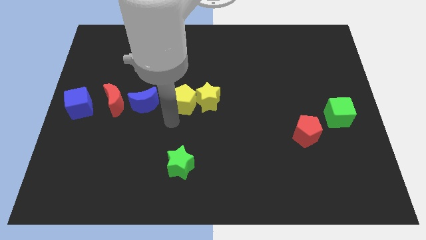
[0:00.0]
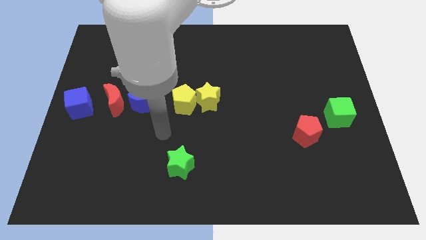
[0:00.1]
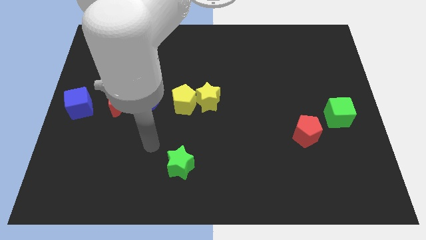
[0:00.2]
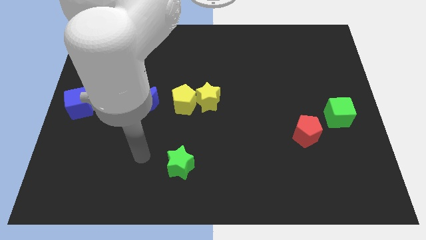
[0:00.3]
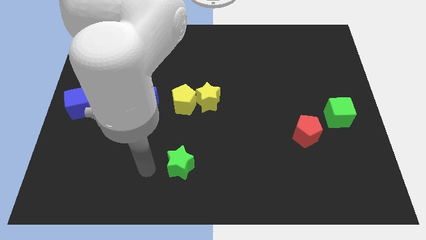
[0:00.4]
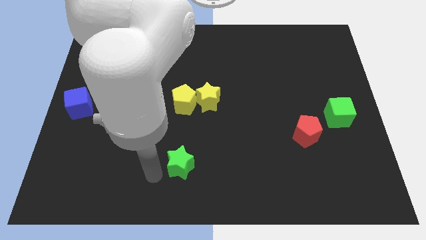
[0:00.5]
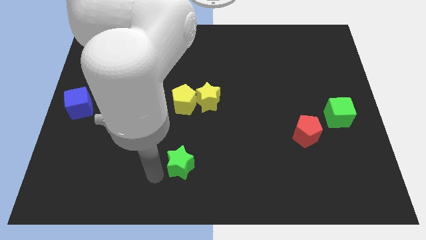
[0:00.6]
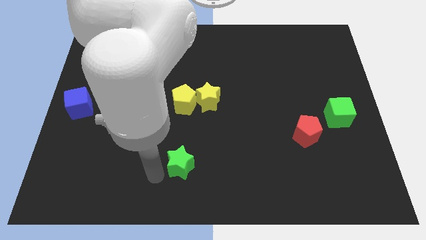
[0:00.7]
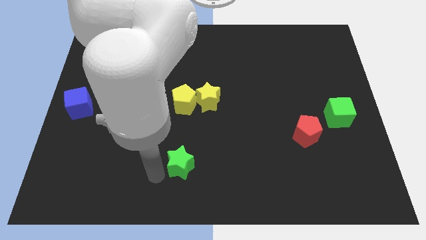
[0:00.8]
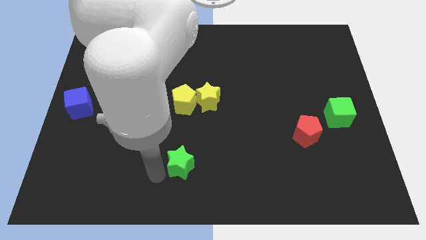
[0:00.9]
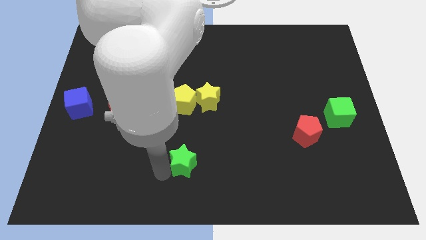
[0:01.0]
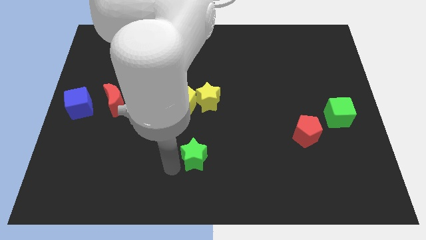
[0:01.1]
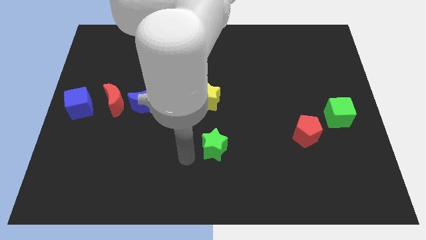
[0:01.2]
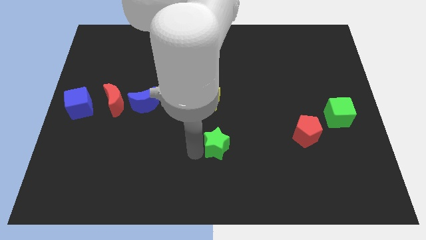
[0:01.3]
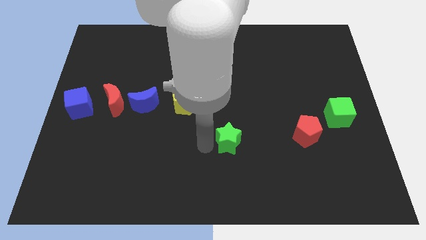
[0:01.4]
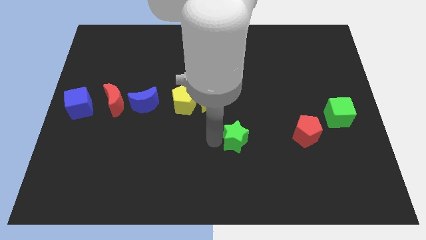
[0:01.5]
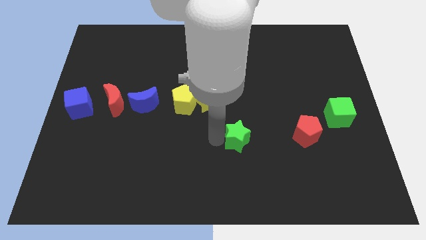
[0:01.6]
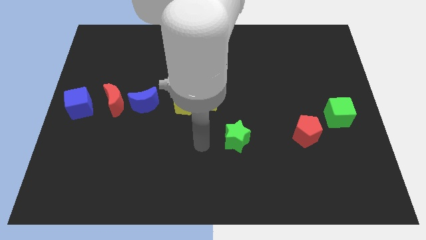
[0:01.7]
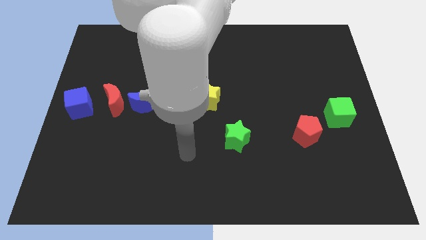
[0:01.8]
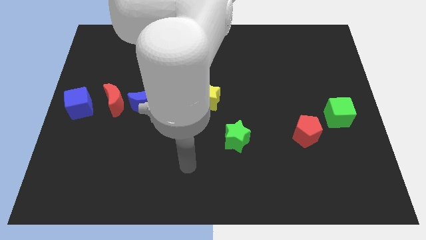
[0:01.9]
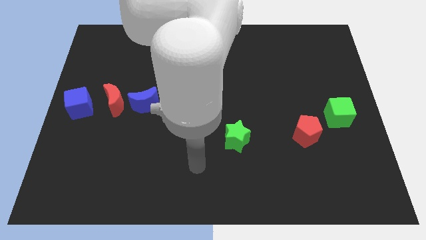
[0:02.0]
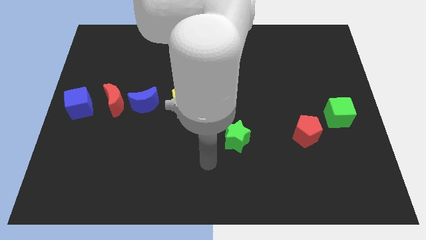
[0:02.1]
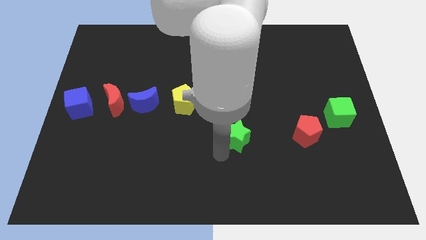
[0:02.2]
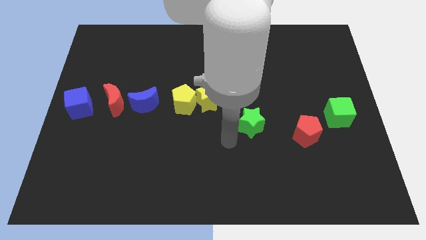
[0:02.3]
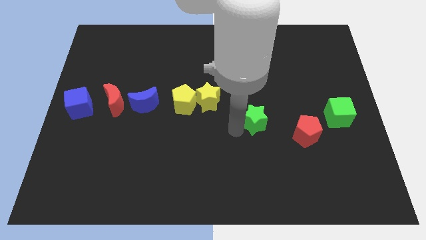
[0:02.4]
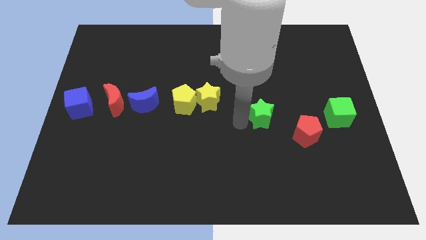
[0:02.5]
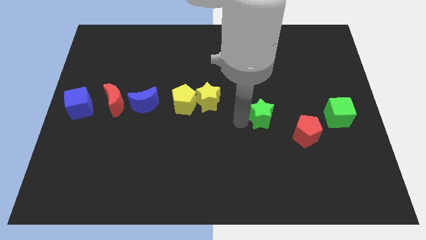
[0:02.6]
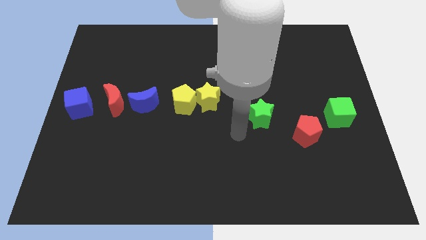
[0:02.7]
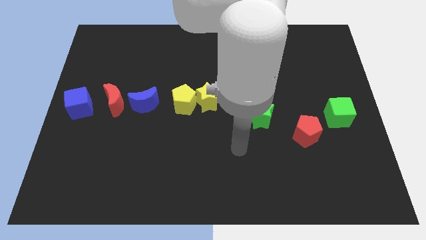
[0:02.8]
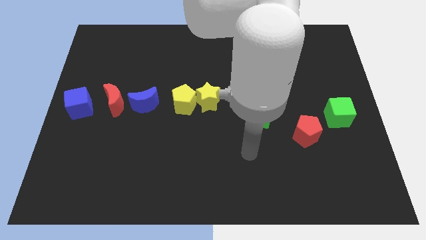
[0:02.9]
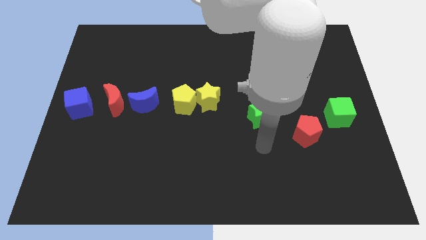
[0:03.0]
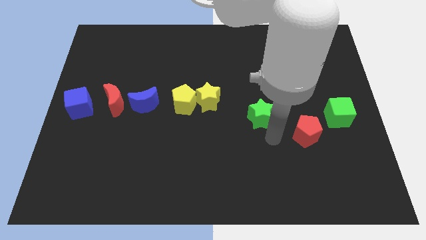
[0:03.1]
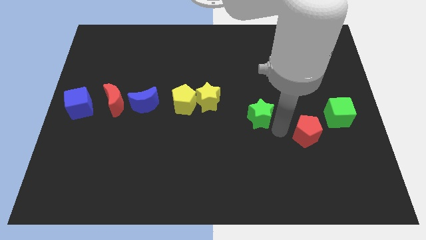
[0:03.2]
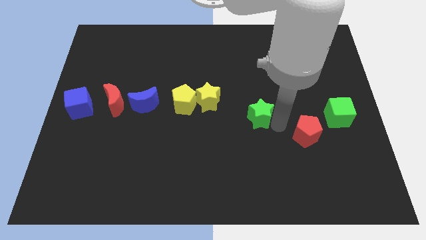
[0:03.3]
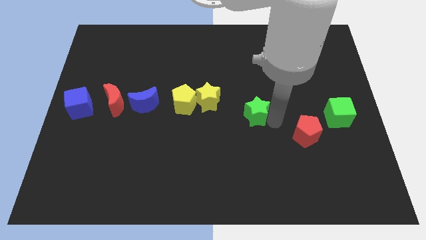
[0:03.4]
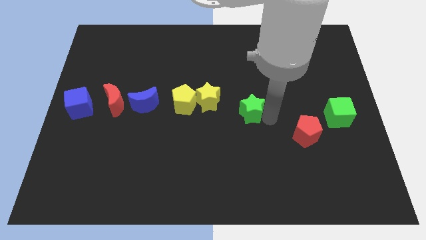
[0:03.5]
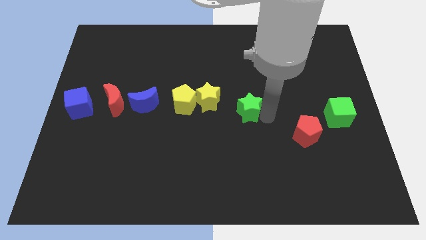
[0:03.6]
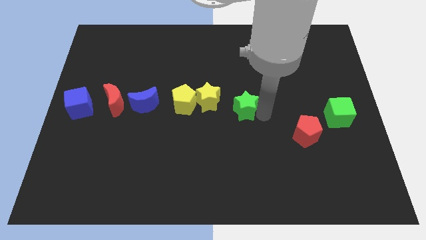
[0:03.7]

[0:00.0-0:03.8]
put the green star at the right side of the yellow star

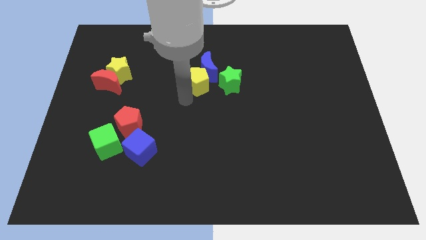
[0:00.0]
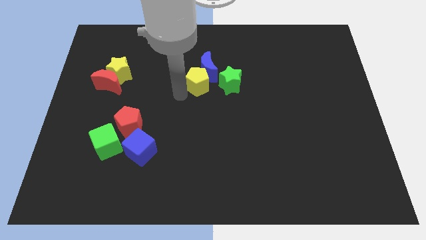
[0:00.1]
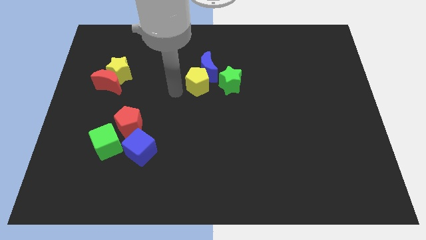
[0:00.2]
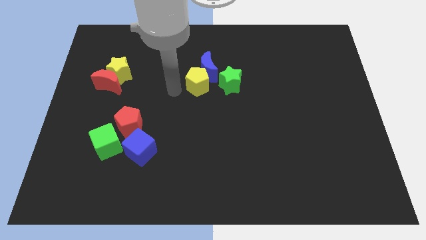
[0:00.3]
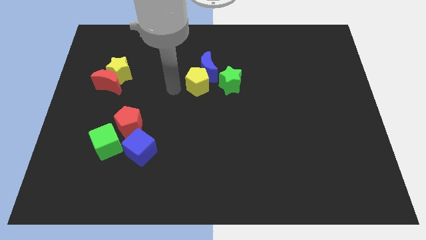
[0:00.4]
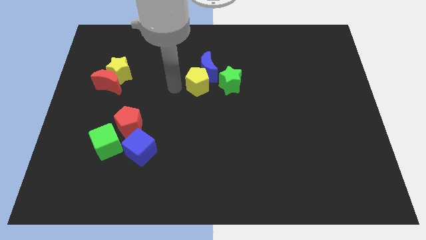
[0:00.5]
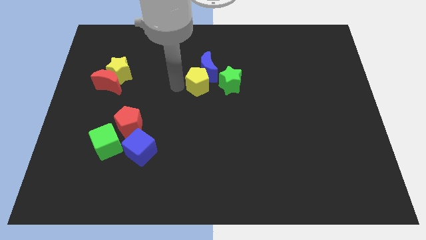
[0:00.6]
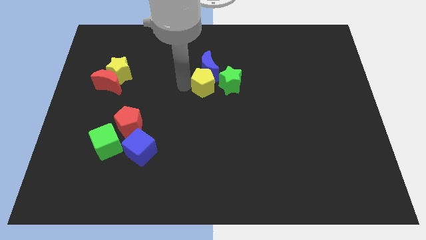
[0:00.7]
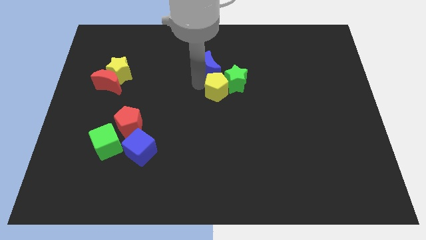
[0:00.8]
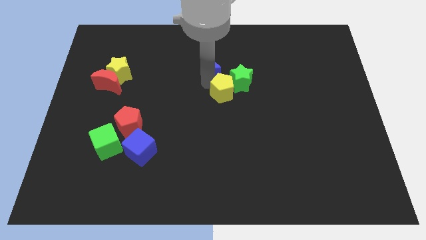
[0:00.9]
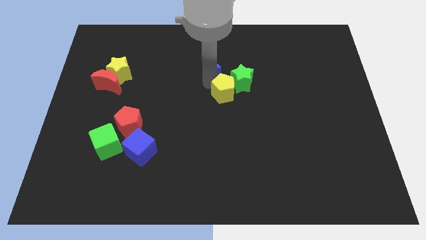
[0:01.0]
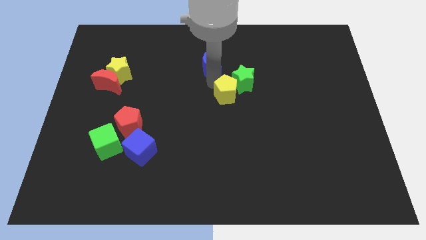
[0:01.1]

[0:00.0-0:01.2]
push the yellow pentagon into the blue moon and green star

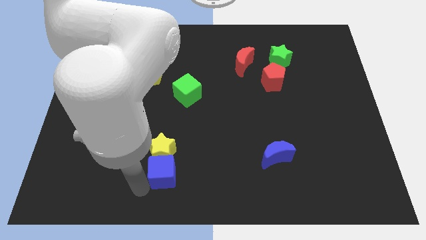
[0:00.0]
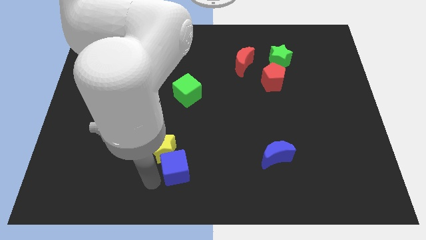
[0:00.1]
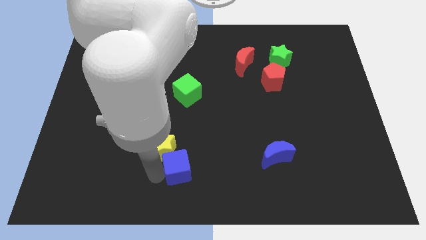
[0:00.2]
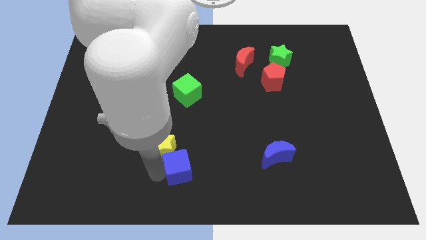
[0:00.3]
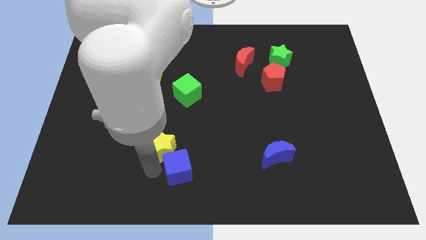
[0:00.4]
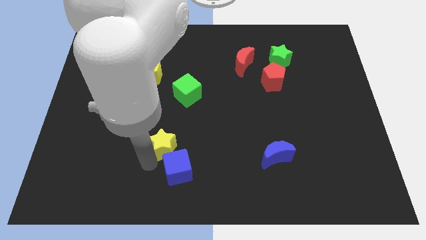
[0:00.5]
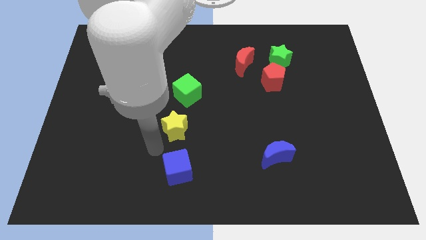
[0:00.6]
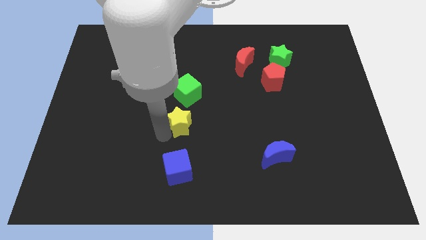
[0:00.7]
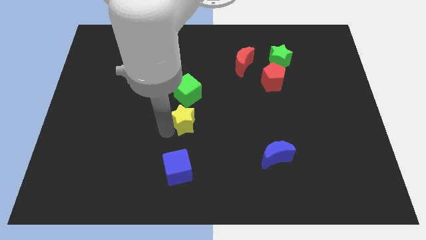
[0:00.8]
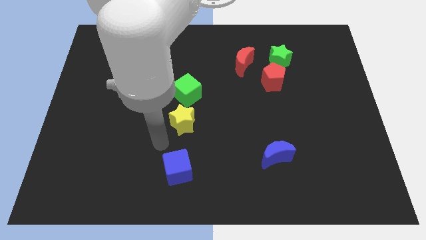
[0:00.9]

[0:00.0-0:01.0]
separate yellow star from the blue cube

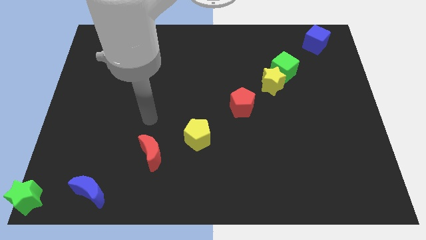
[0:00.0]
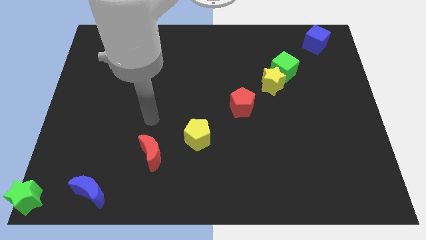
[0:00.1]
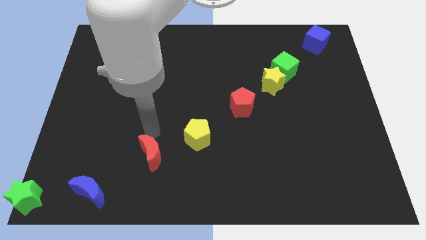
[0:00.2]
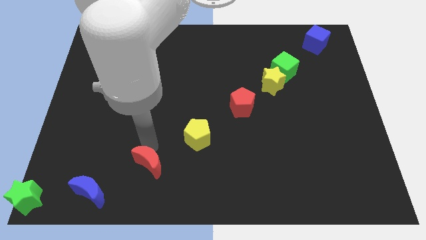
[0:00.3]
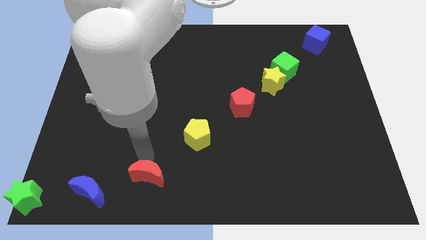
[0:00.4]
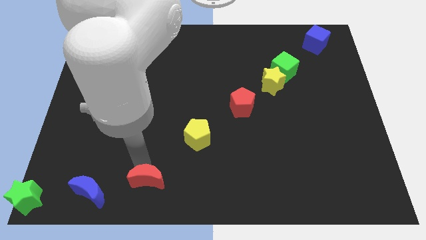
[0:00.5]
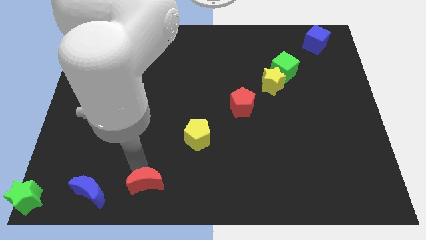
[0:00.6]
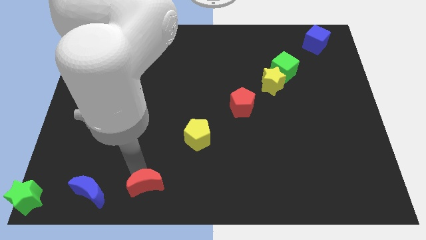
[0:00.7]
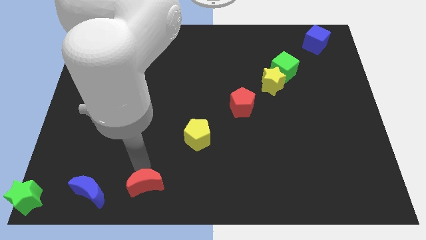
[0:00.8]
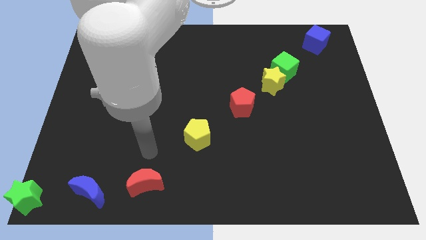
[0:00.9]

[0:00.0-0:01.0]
move the red moon slightly down

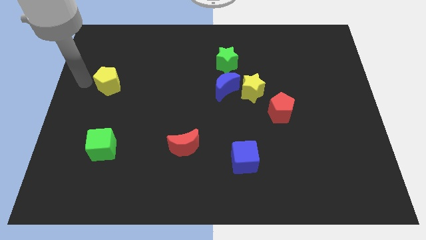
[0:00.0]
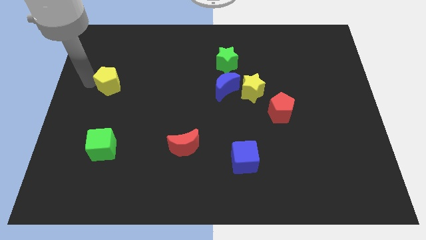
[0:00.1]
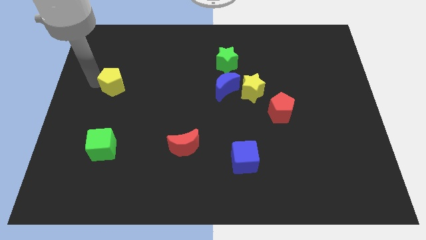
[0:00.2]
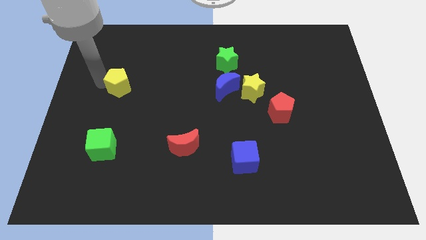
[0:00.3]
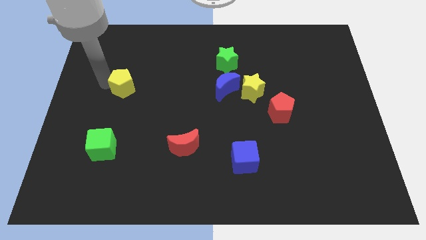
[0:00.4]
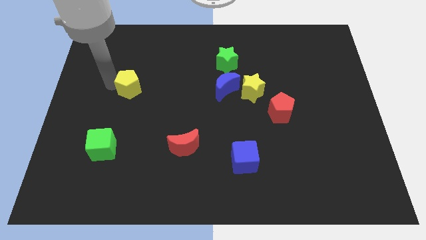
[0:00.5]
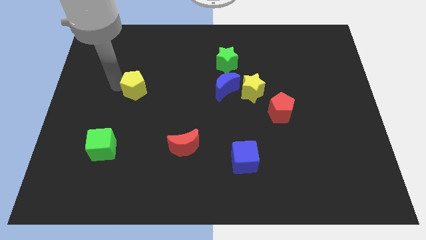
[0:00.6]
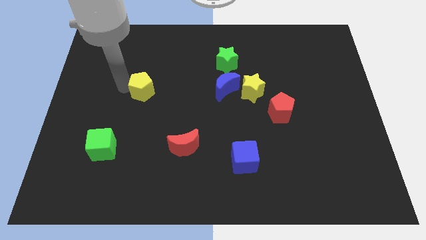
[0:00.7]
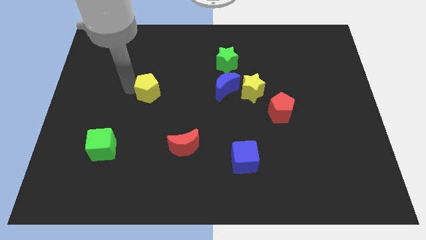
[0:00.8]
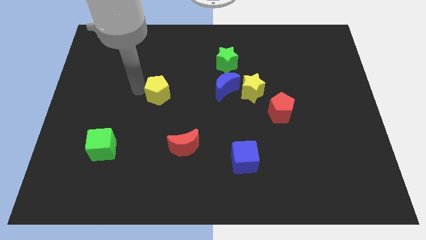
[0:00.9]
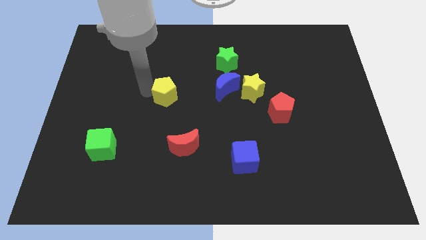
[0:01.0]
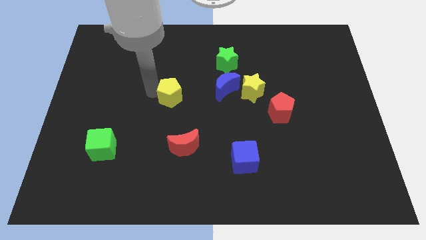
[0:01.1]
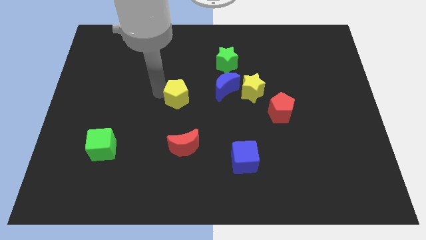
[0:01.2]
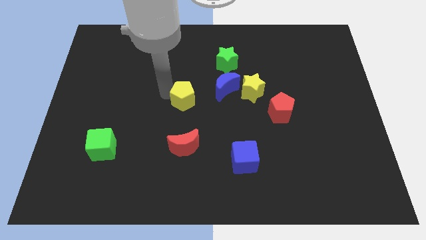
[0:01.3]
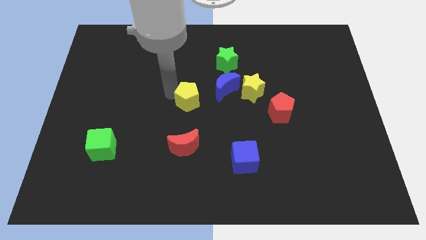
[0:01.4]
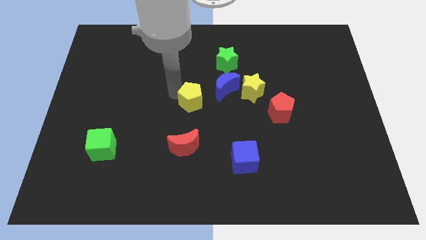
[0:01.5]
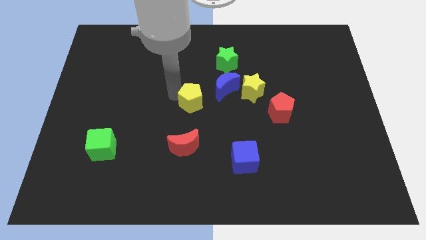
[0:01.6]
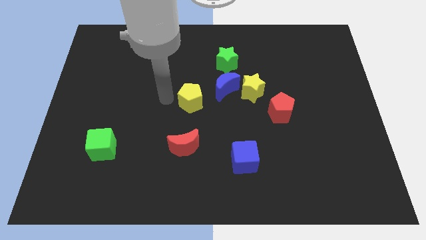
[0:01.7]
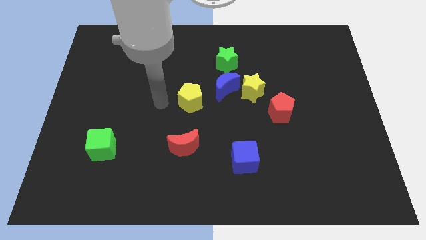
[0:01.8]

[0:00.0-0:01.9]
push the yellow pentagon towards the center of the board
